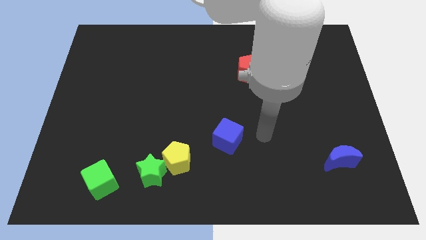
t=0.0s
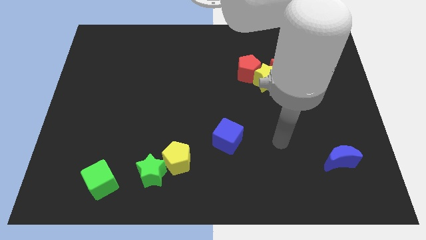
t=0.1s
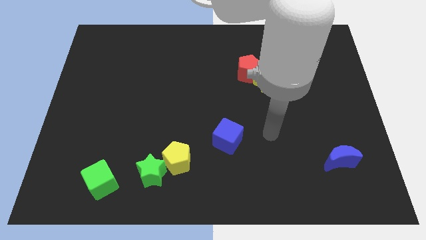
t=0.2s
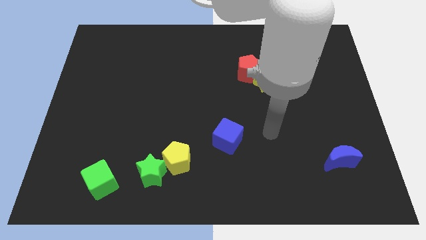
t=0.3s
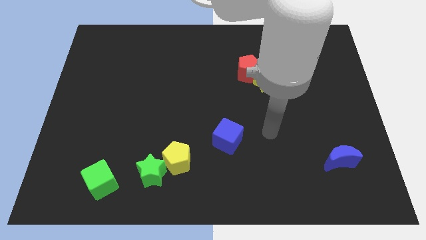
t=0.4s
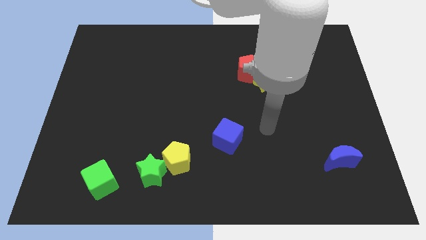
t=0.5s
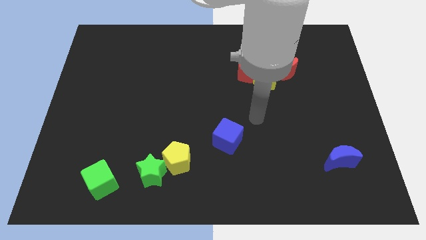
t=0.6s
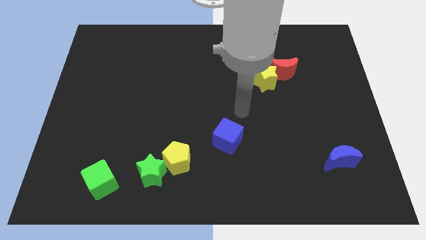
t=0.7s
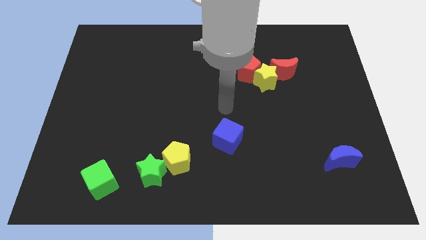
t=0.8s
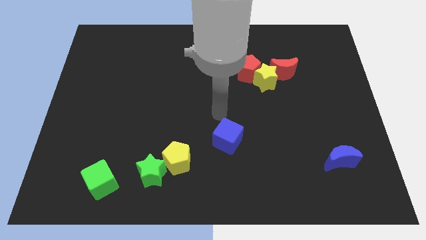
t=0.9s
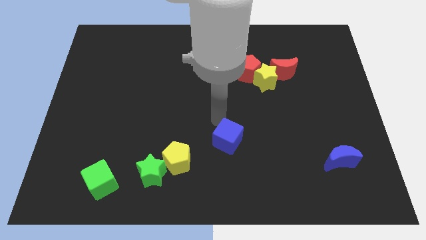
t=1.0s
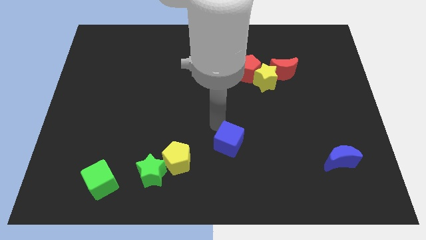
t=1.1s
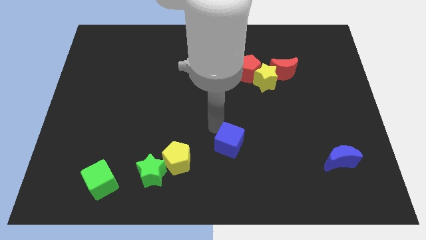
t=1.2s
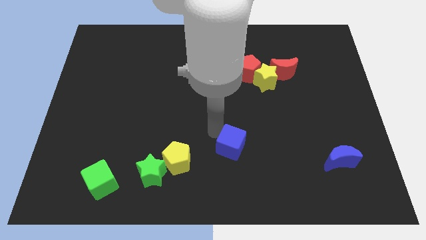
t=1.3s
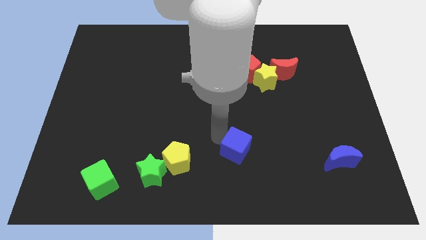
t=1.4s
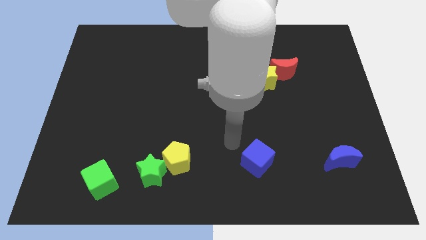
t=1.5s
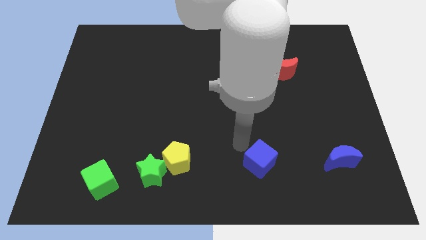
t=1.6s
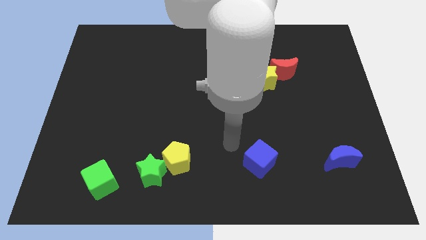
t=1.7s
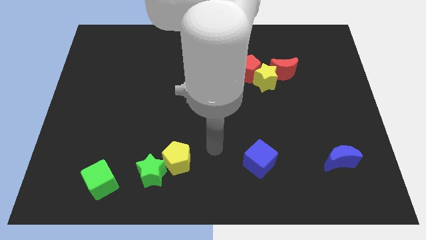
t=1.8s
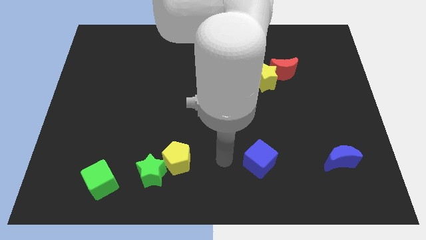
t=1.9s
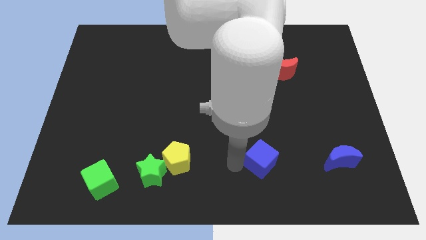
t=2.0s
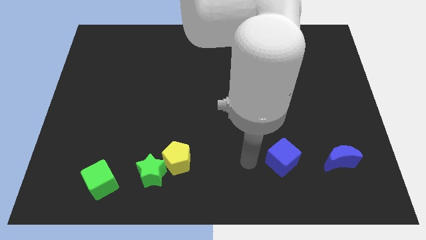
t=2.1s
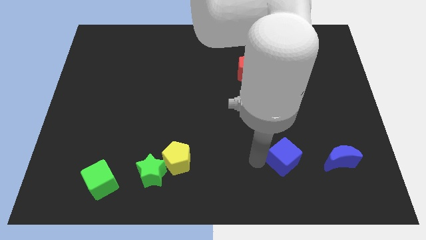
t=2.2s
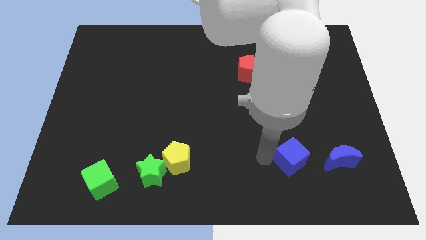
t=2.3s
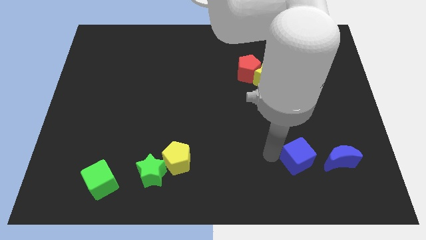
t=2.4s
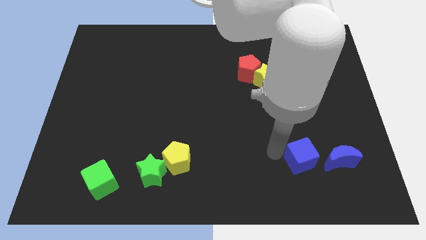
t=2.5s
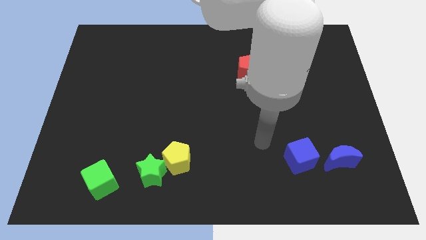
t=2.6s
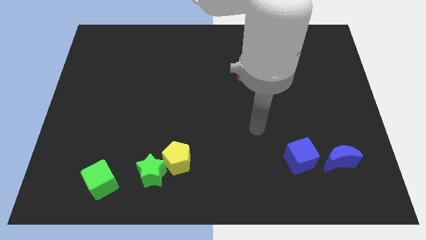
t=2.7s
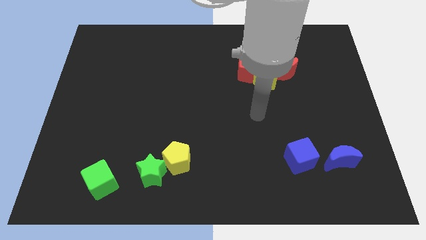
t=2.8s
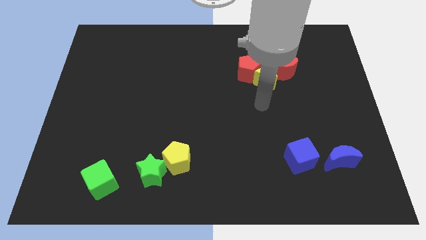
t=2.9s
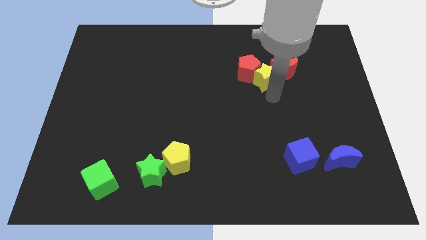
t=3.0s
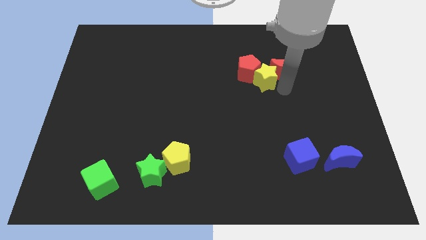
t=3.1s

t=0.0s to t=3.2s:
push the blue cube to the left side of the blue crescent

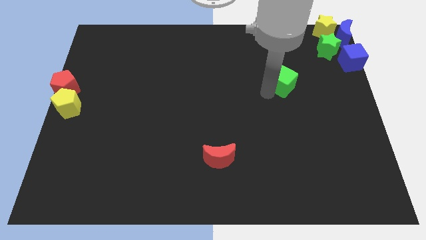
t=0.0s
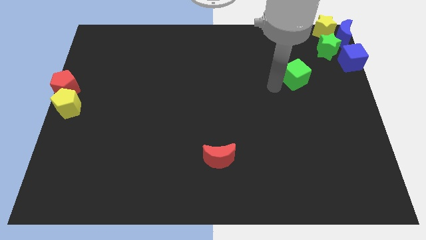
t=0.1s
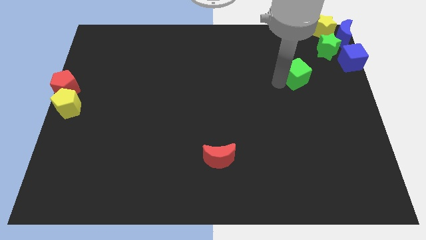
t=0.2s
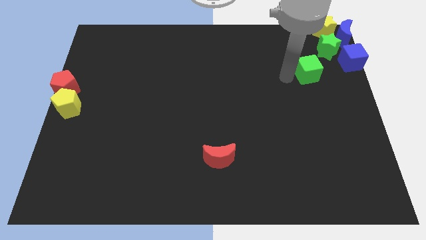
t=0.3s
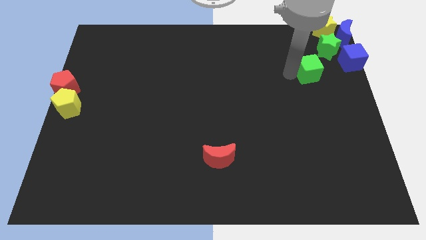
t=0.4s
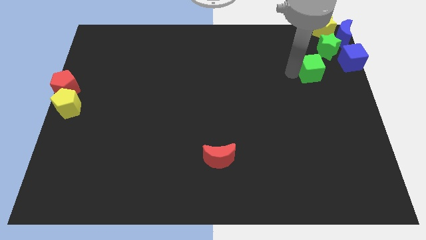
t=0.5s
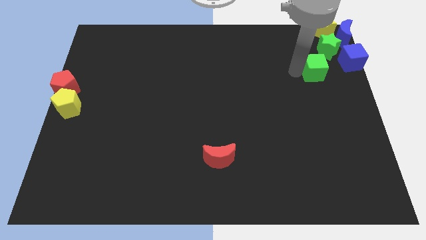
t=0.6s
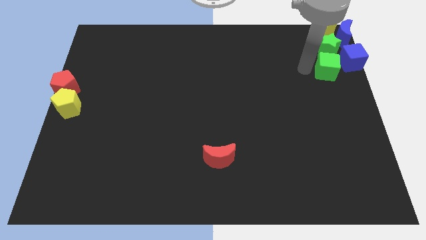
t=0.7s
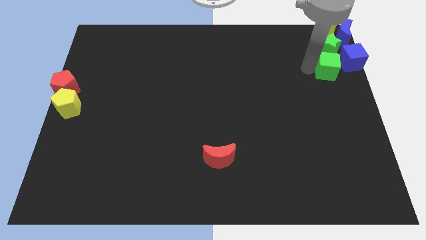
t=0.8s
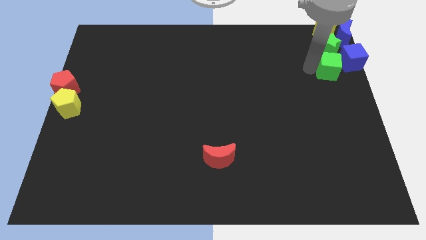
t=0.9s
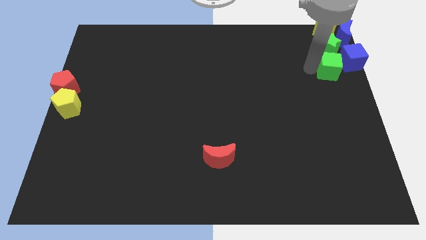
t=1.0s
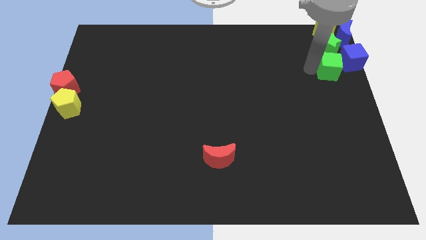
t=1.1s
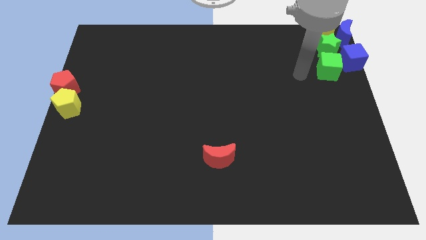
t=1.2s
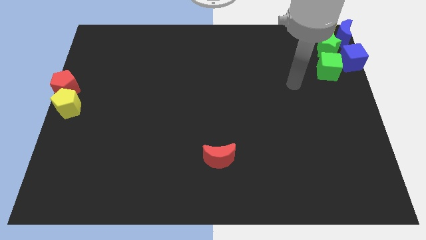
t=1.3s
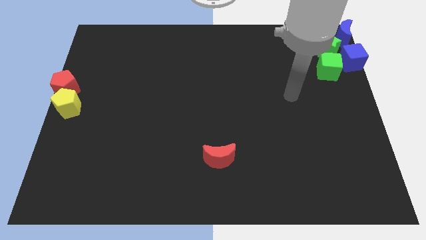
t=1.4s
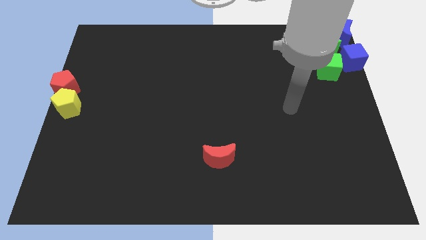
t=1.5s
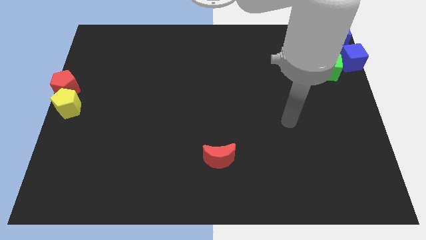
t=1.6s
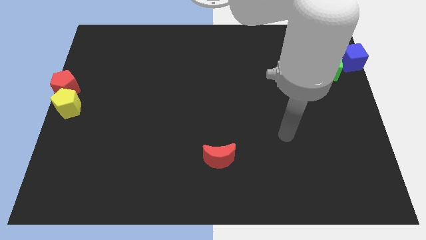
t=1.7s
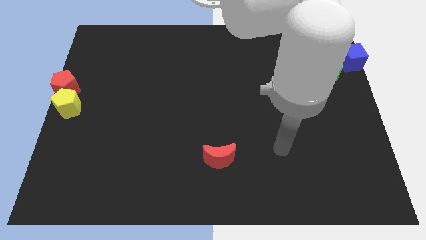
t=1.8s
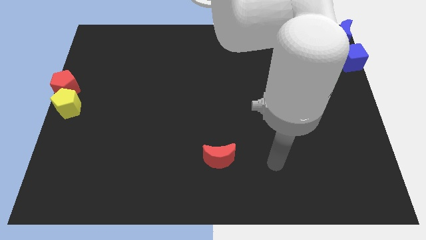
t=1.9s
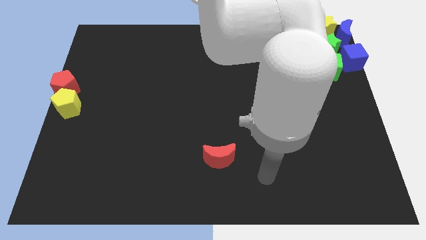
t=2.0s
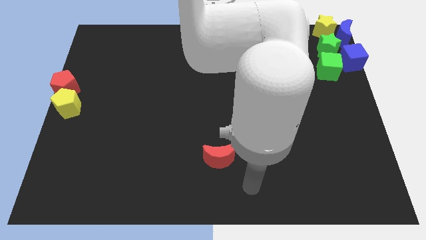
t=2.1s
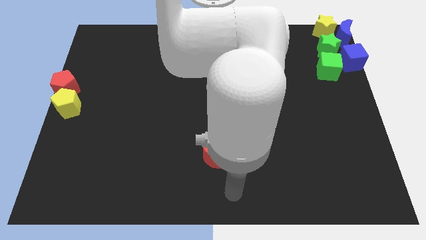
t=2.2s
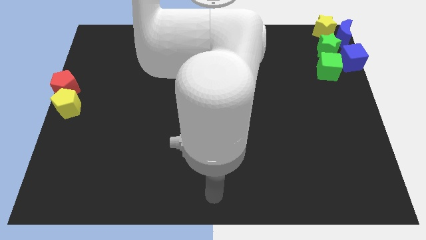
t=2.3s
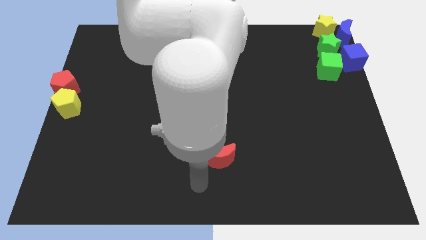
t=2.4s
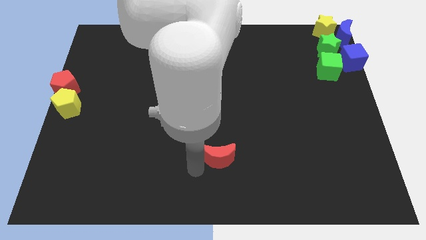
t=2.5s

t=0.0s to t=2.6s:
put the green cube underneath the green star

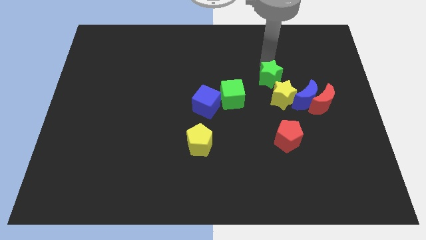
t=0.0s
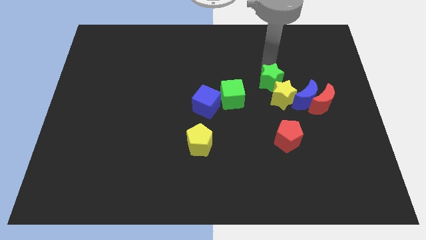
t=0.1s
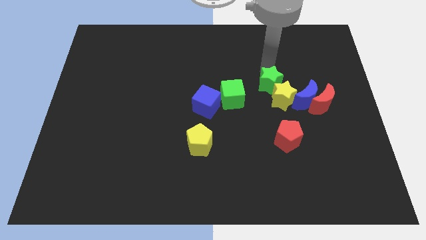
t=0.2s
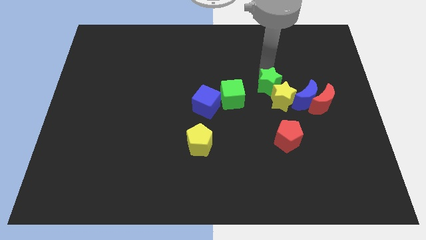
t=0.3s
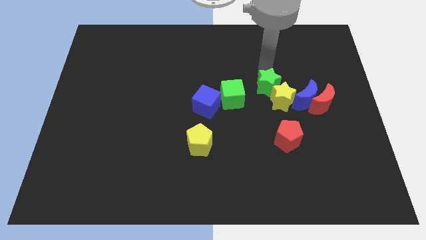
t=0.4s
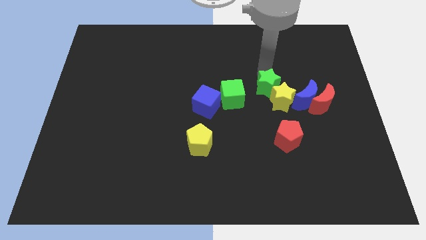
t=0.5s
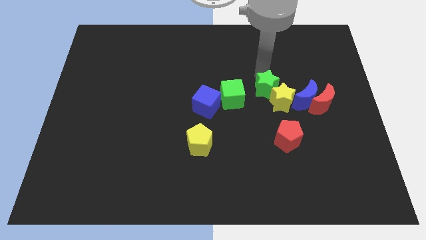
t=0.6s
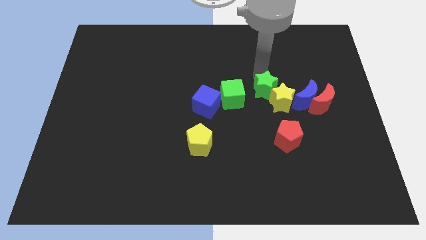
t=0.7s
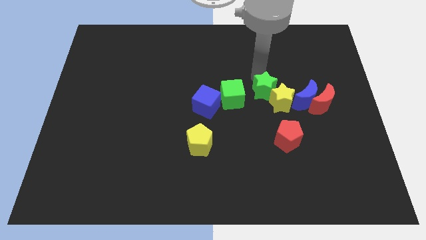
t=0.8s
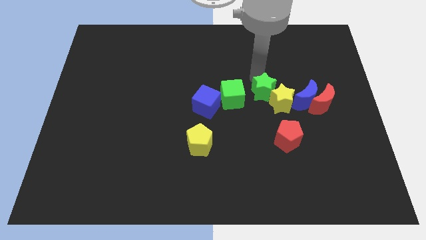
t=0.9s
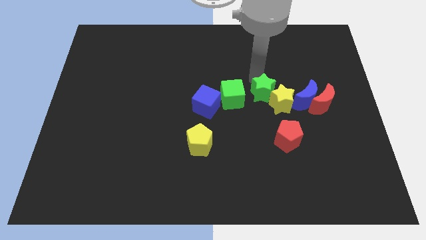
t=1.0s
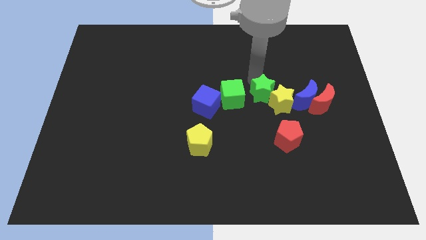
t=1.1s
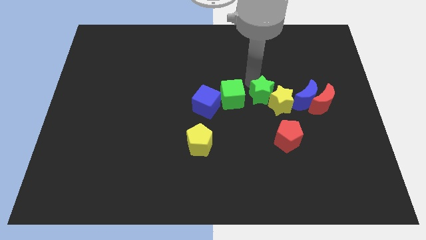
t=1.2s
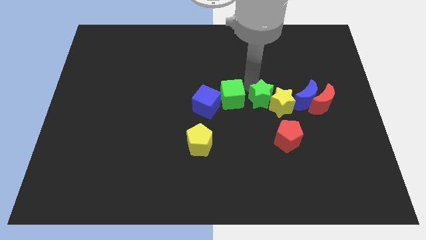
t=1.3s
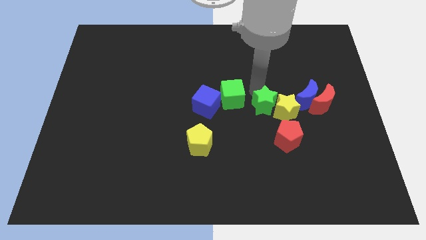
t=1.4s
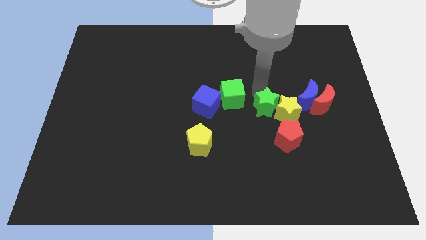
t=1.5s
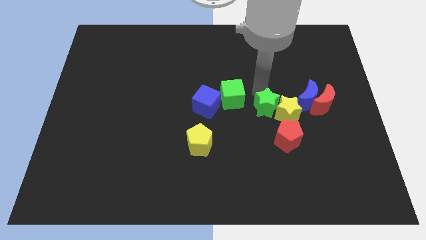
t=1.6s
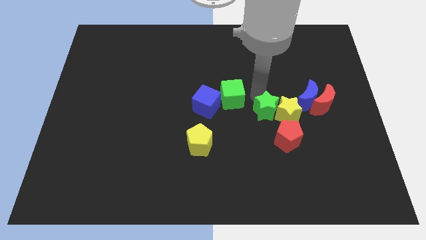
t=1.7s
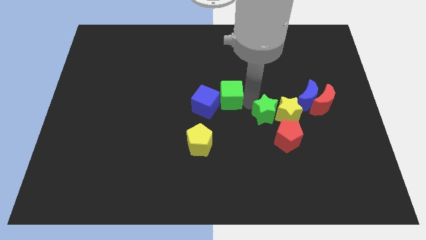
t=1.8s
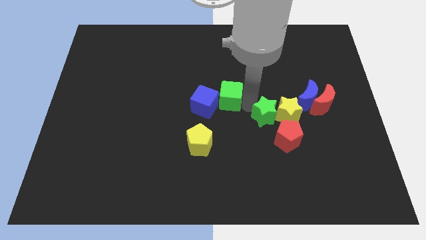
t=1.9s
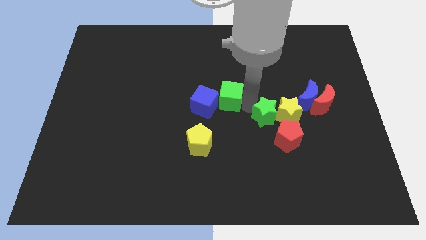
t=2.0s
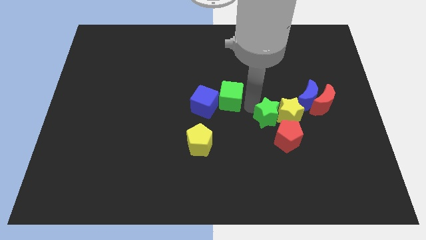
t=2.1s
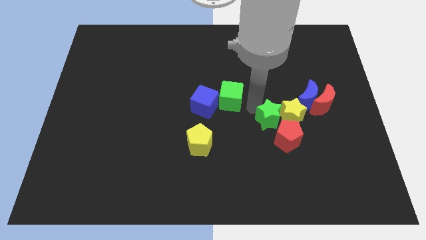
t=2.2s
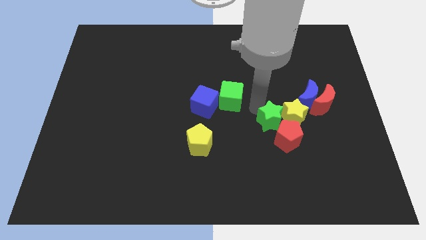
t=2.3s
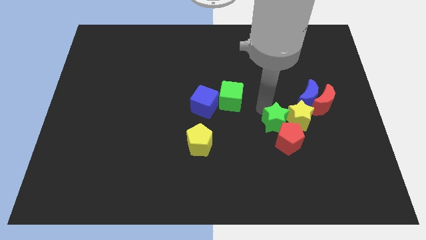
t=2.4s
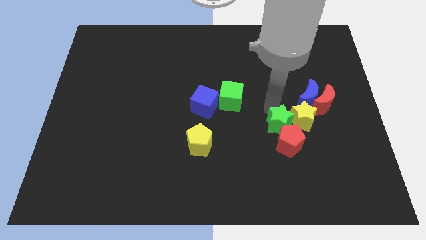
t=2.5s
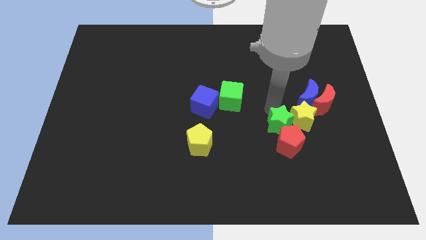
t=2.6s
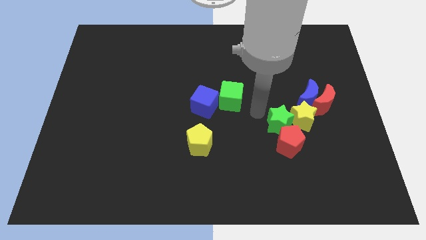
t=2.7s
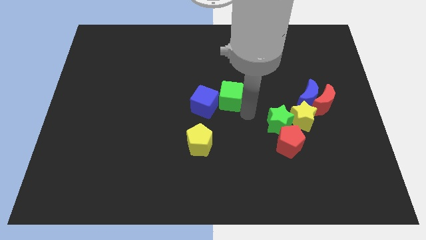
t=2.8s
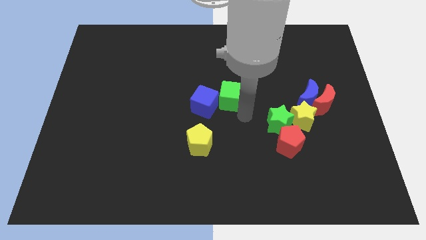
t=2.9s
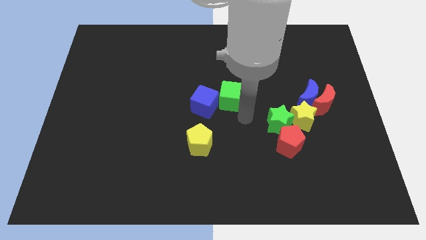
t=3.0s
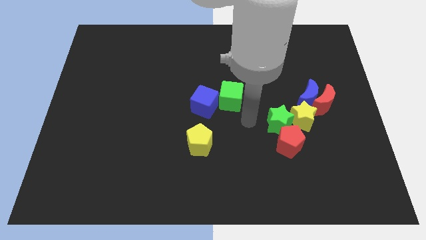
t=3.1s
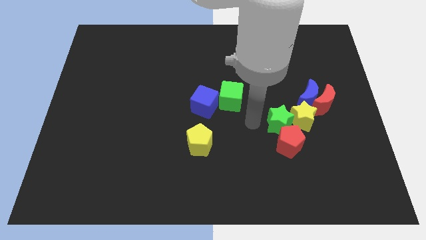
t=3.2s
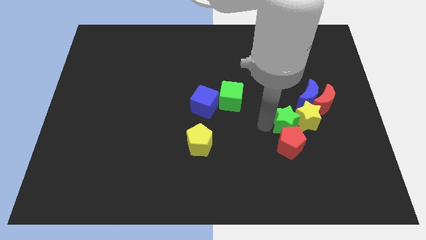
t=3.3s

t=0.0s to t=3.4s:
place the stars on the top of the red pentagon
